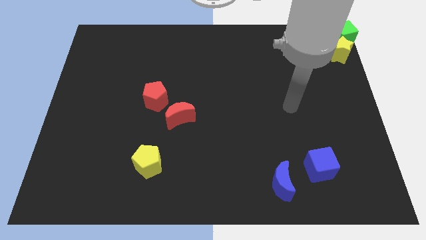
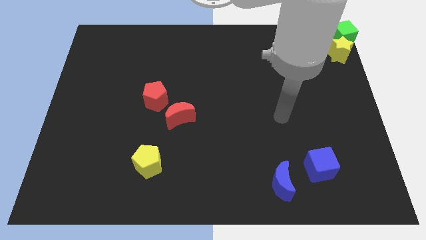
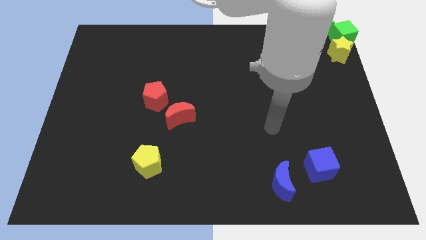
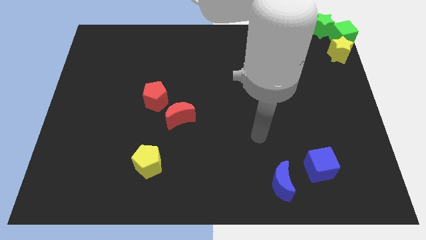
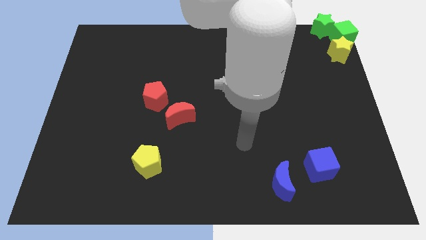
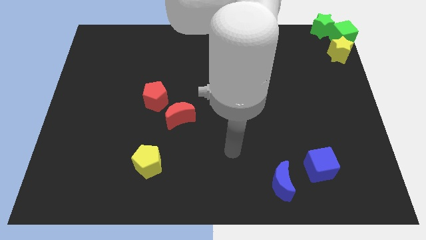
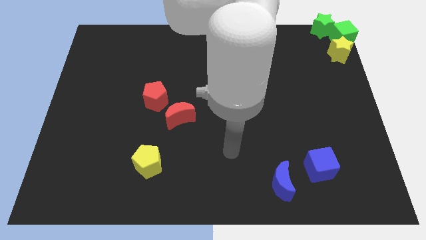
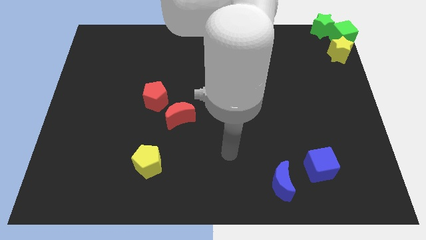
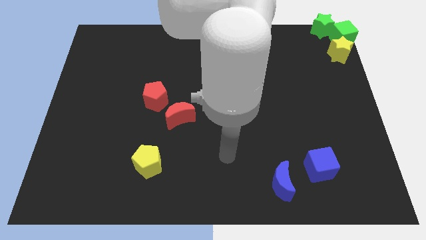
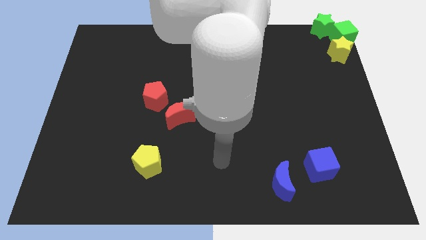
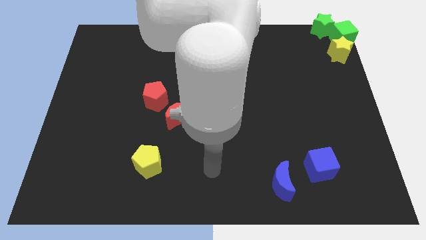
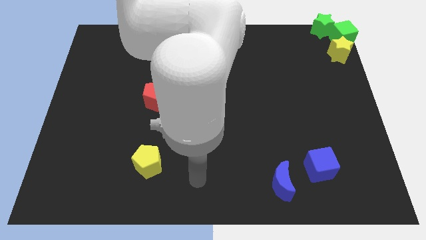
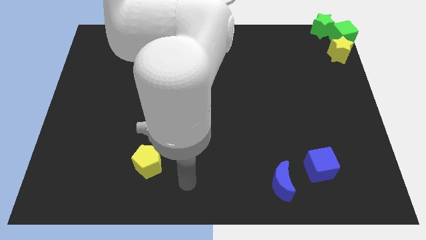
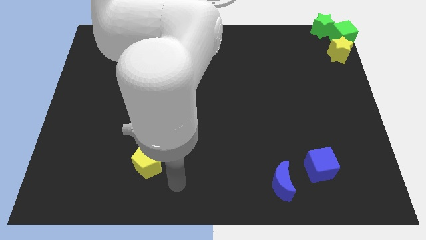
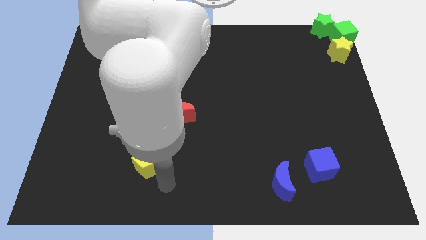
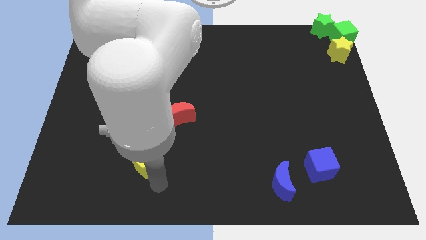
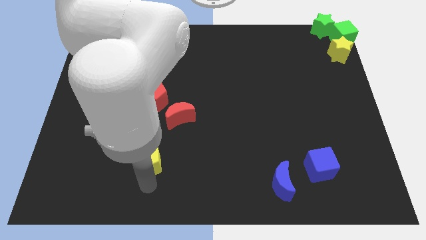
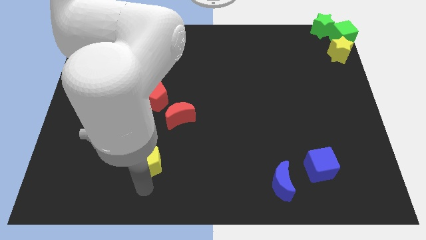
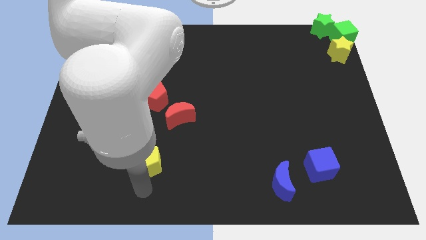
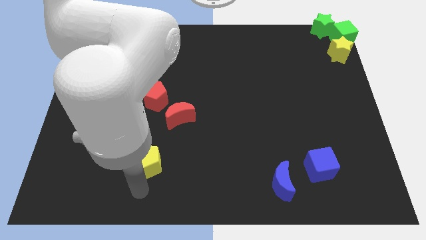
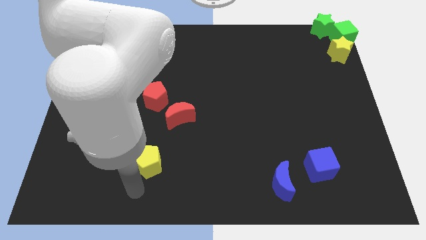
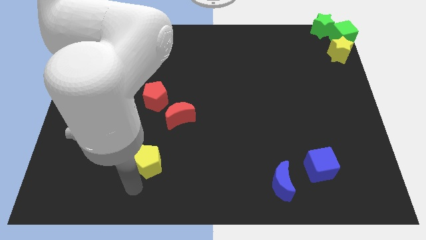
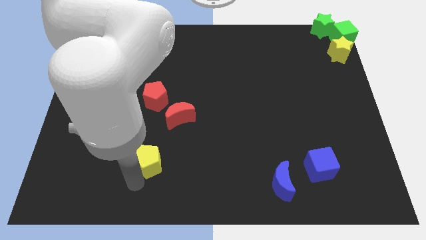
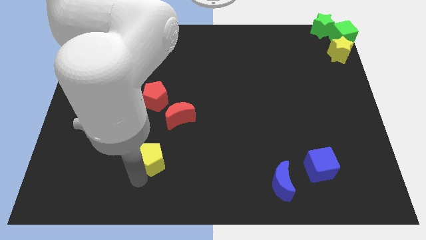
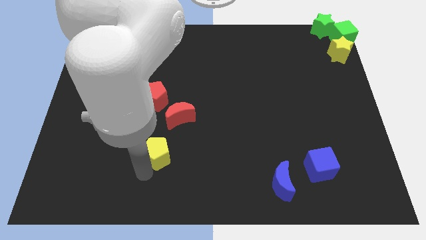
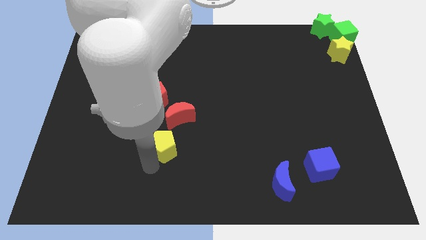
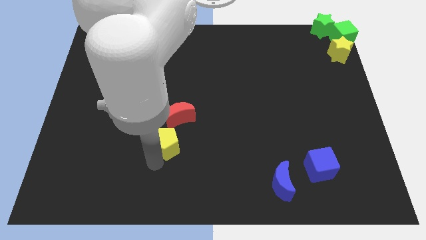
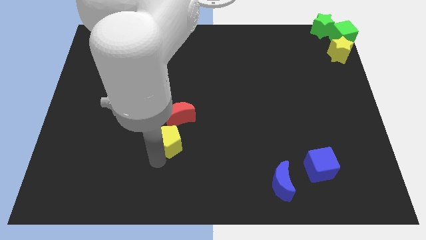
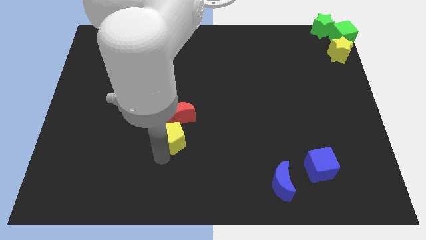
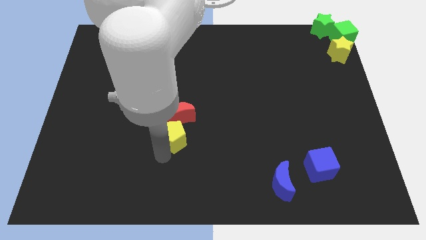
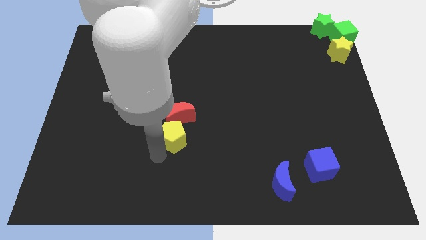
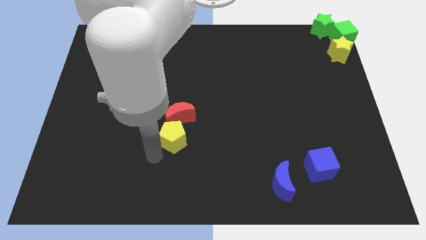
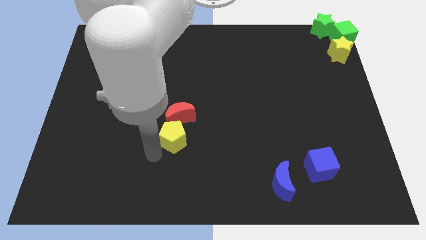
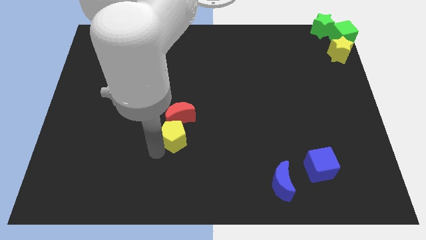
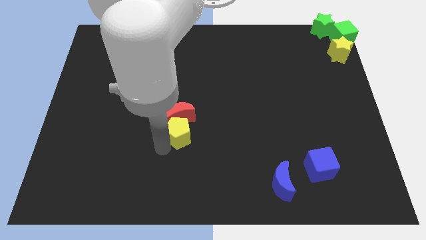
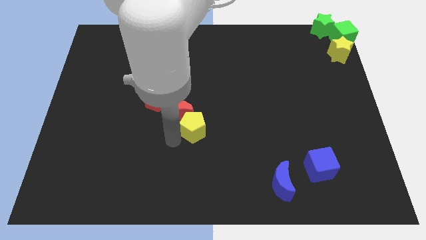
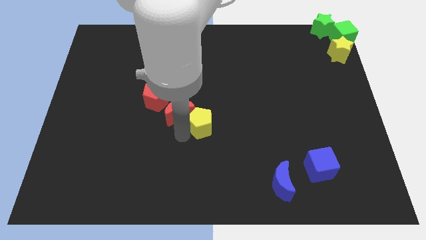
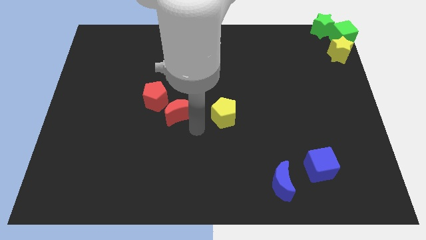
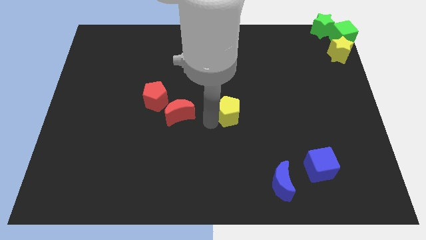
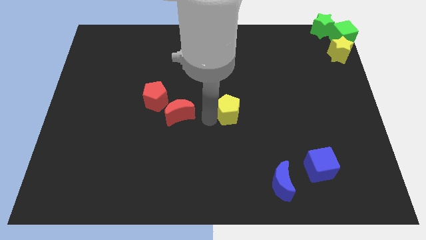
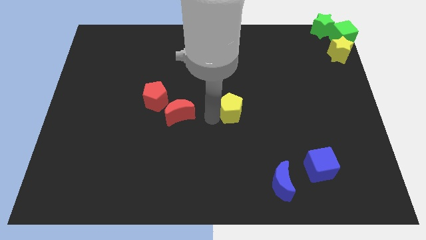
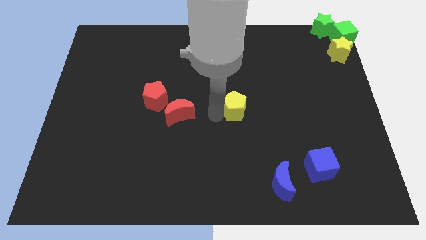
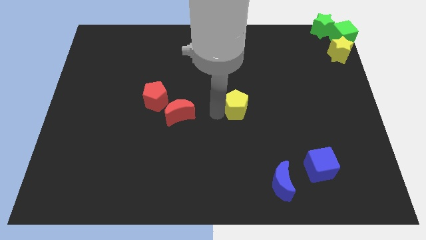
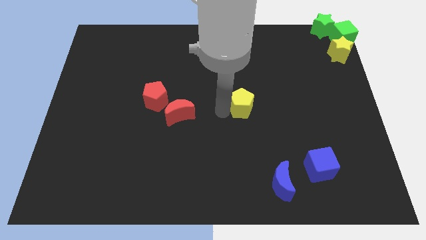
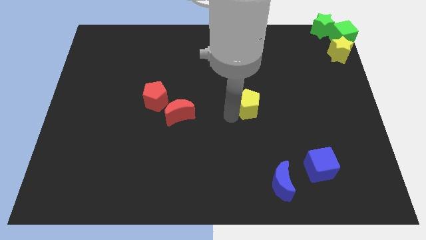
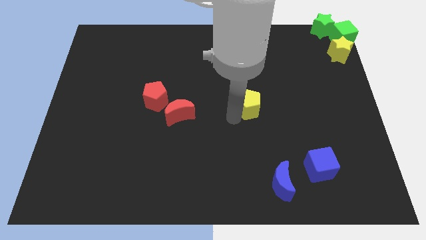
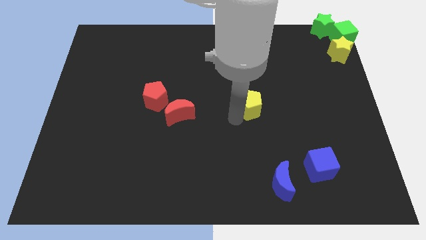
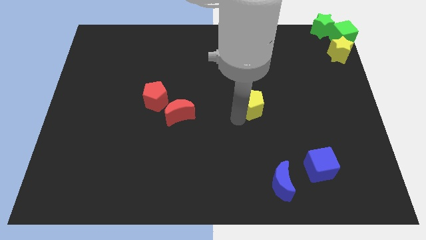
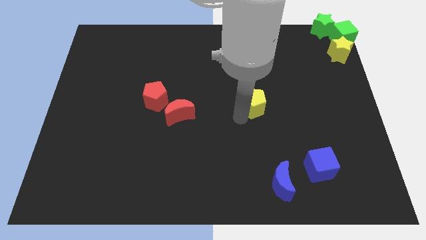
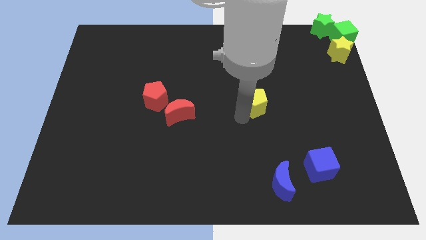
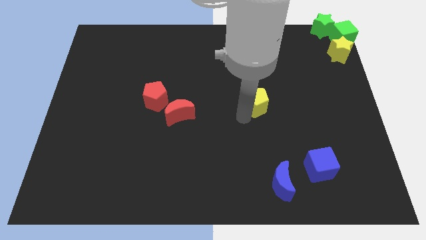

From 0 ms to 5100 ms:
push the yellow pentagon to the parallel red moon

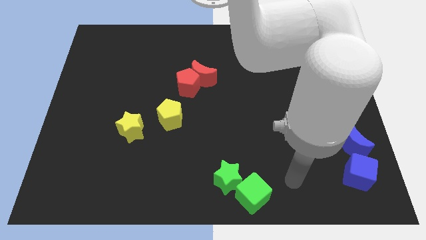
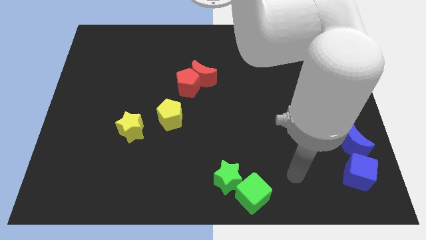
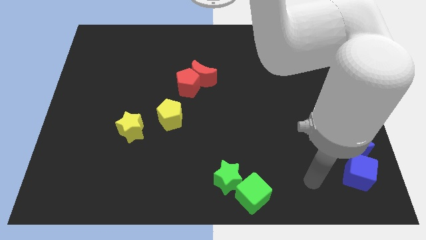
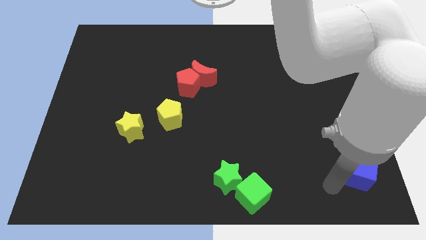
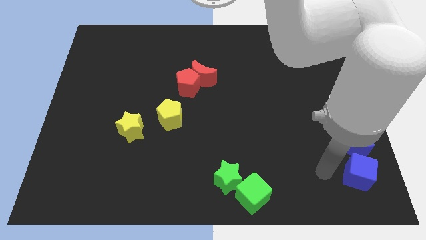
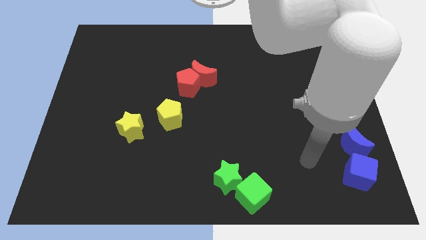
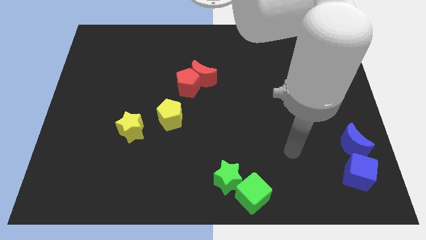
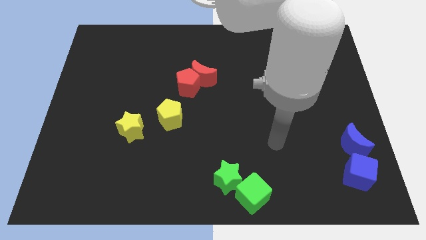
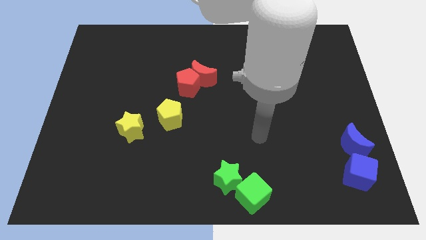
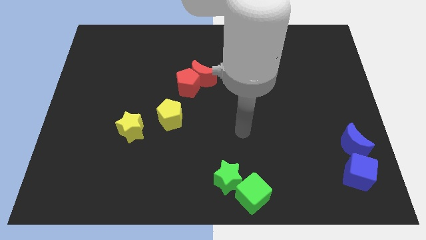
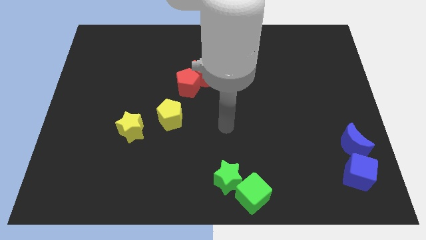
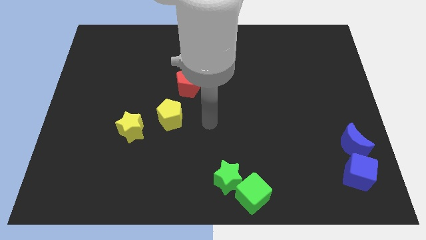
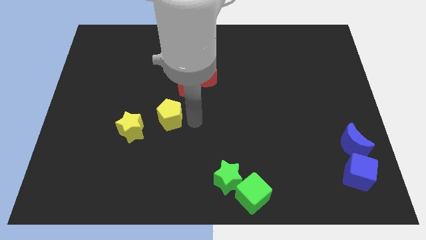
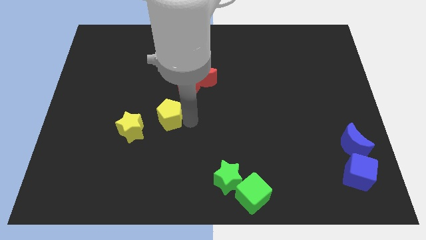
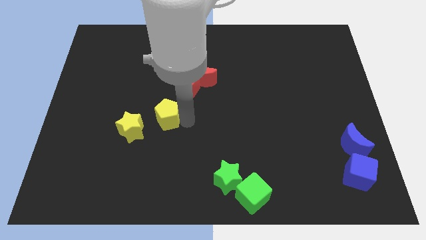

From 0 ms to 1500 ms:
move your hand to the yellow pentagon

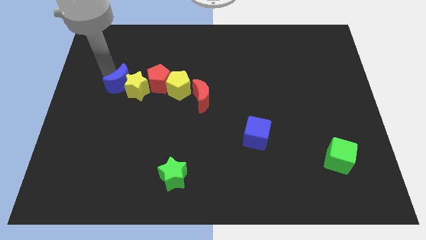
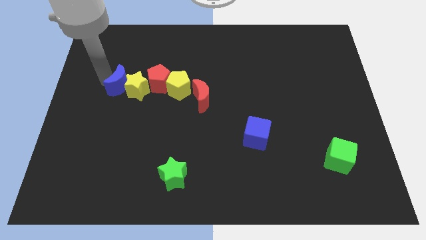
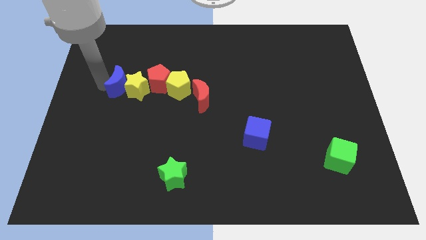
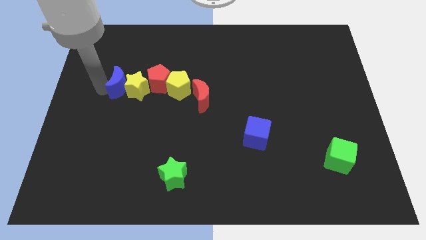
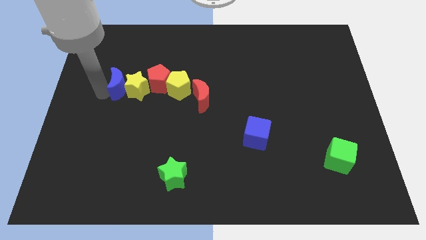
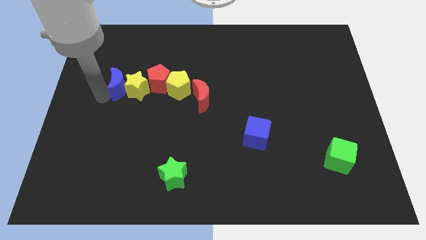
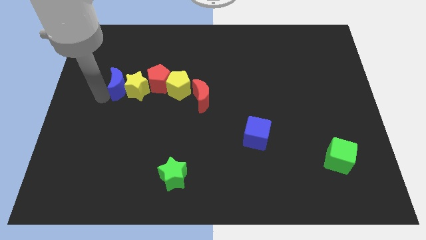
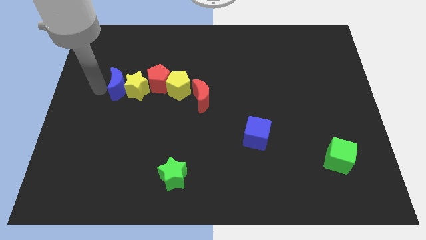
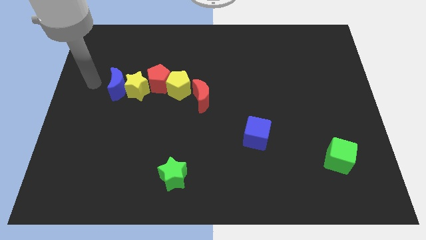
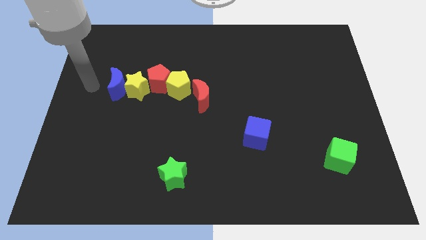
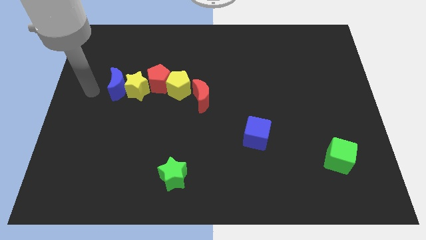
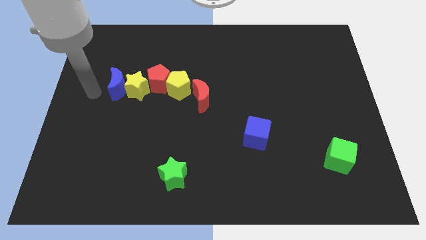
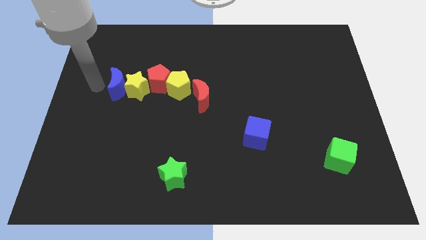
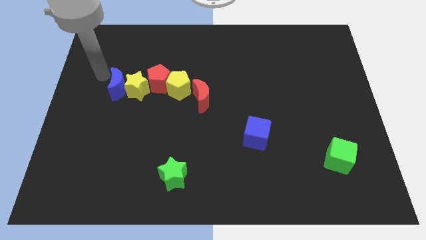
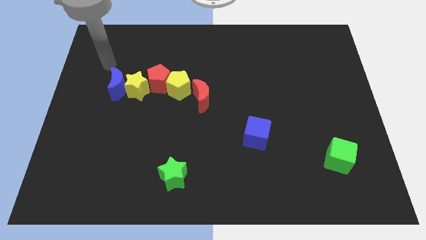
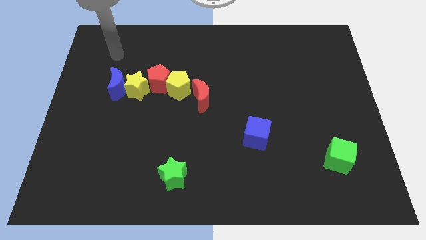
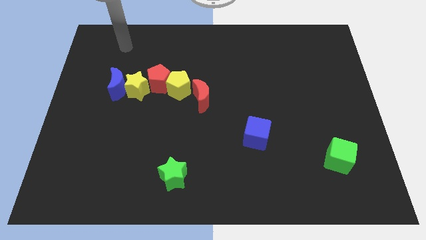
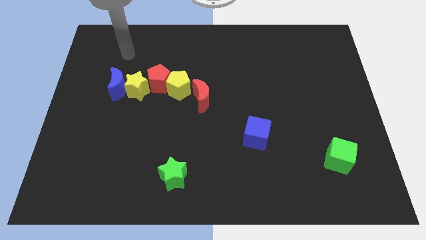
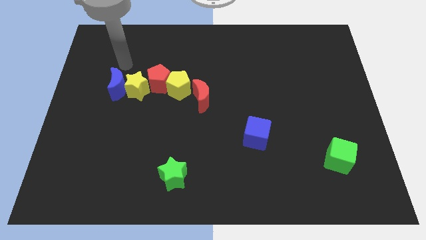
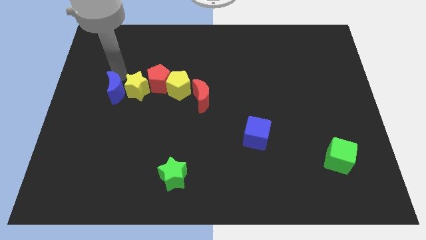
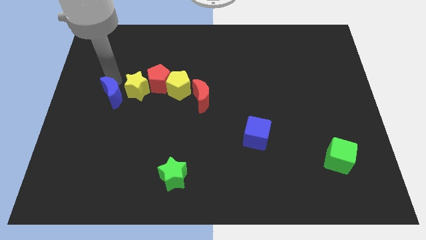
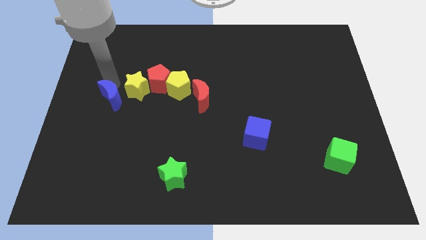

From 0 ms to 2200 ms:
place blue moon to the left of yellow star
